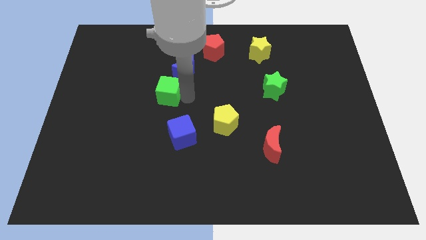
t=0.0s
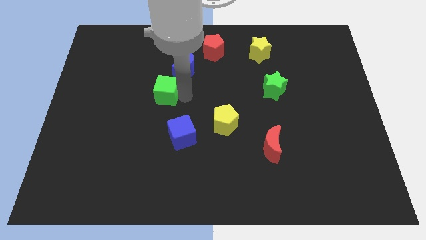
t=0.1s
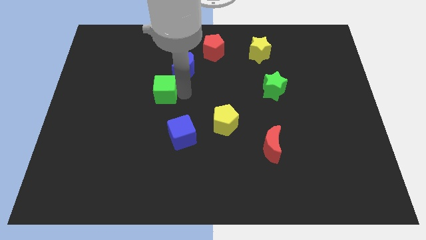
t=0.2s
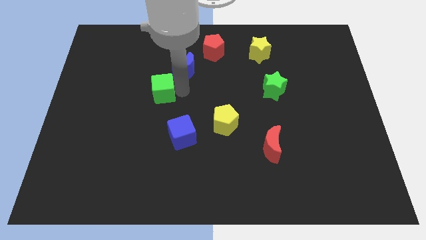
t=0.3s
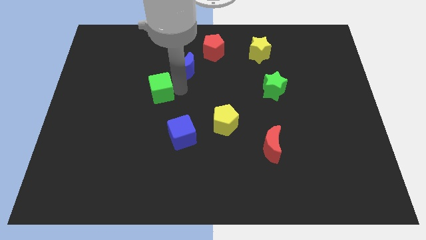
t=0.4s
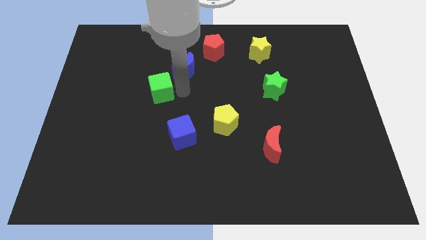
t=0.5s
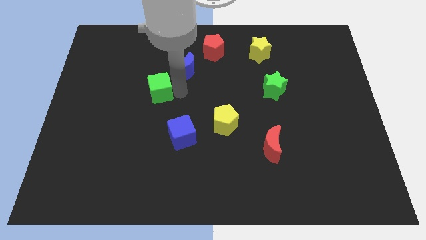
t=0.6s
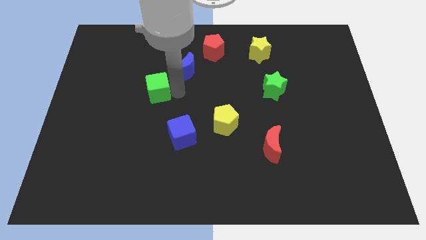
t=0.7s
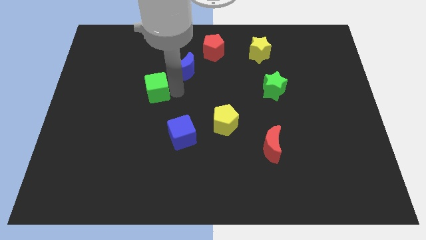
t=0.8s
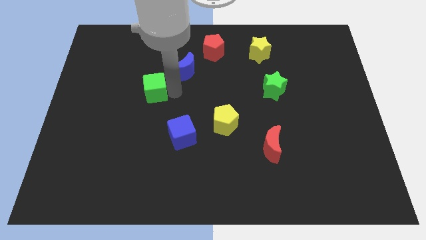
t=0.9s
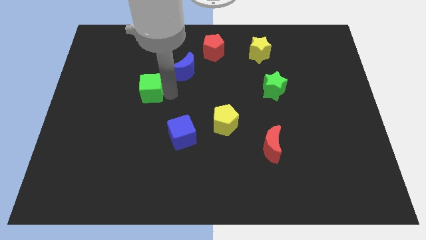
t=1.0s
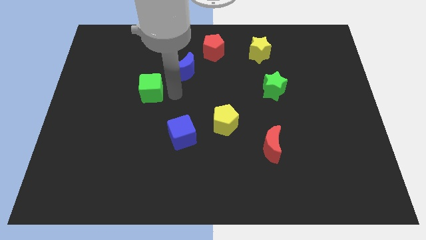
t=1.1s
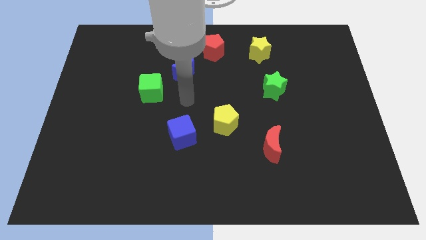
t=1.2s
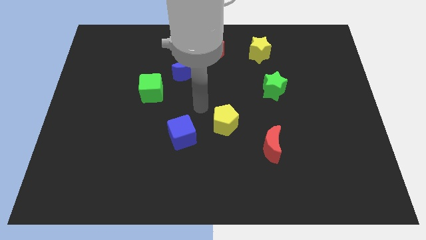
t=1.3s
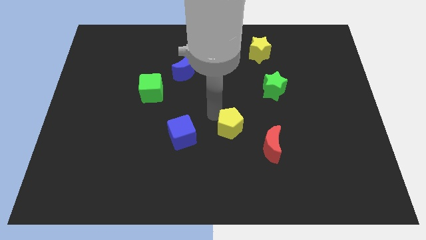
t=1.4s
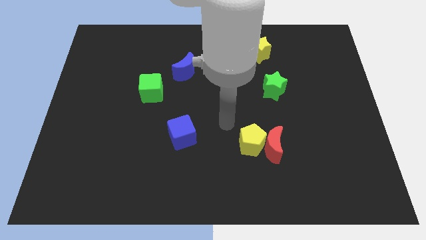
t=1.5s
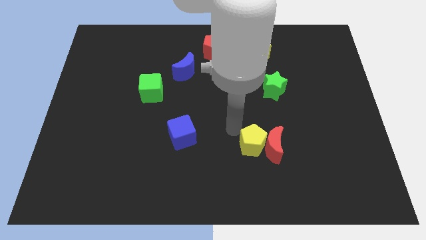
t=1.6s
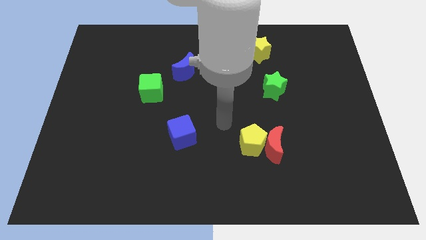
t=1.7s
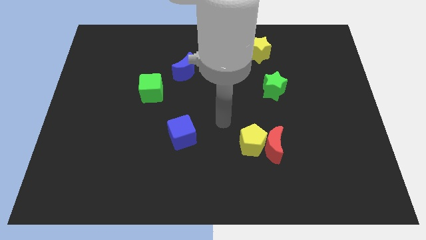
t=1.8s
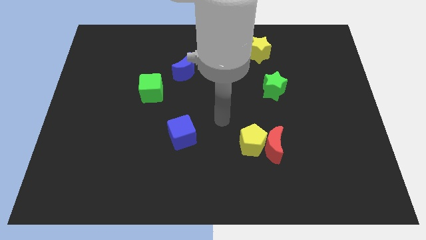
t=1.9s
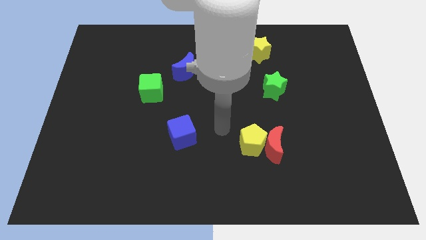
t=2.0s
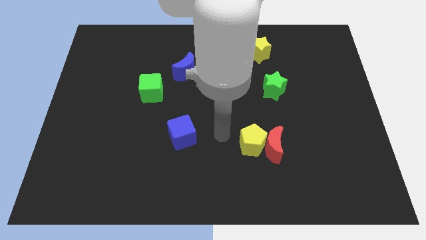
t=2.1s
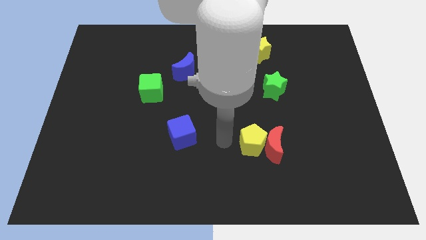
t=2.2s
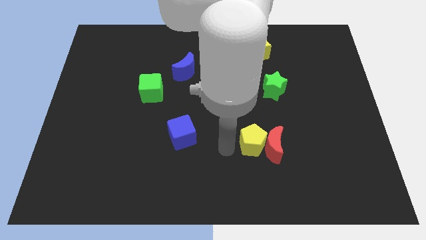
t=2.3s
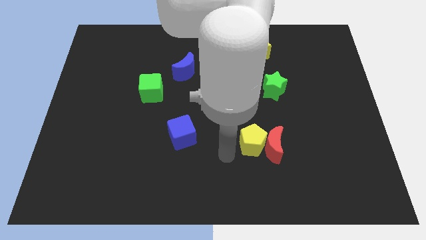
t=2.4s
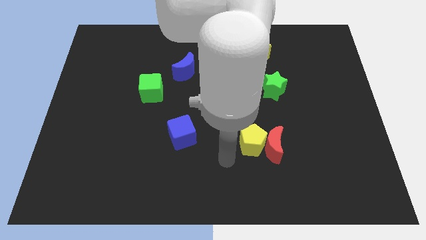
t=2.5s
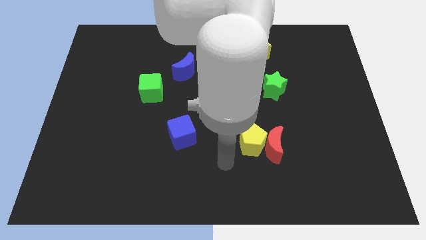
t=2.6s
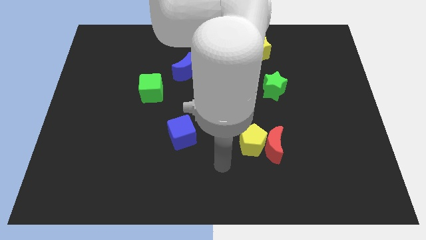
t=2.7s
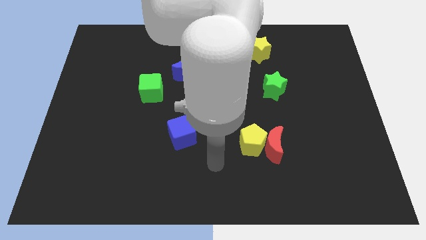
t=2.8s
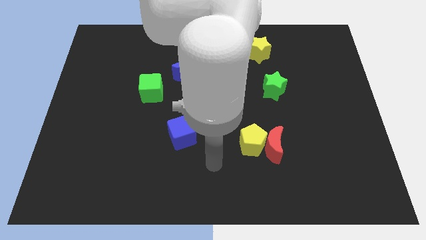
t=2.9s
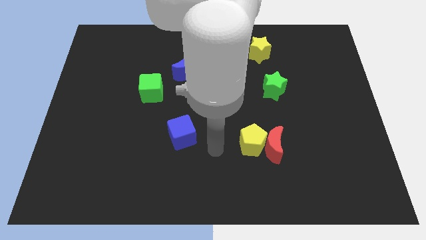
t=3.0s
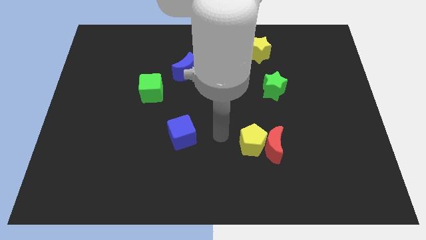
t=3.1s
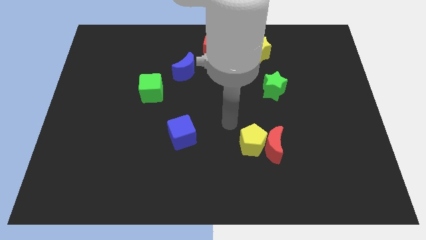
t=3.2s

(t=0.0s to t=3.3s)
move the yellow pentagon into the red moon

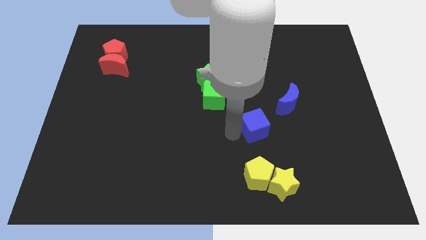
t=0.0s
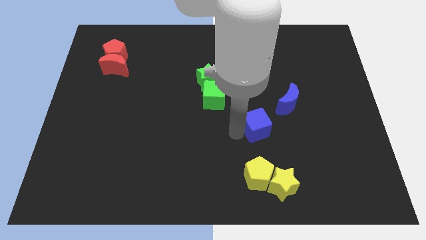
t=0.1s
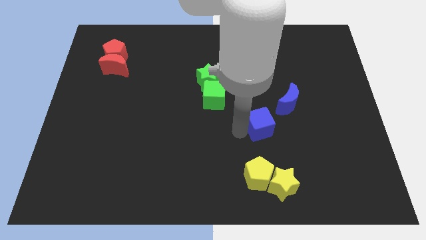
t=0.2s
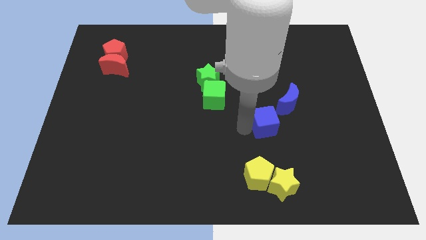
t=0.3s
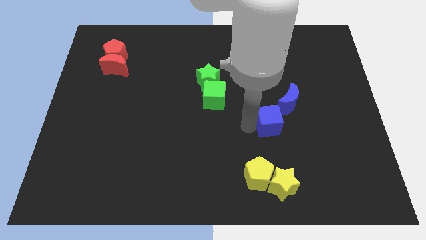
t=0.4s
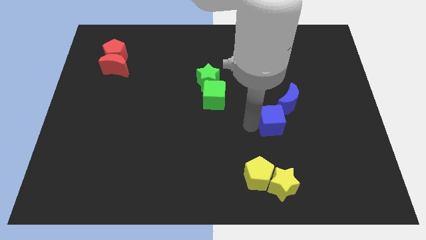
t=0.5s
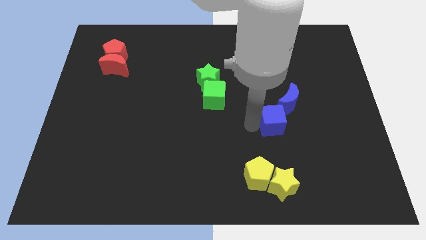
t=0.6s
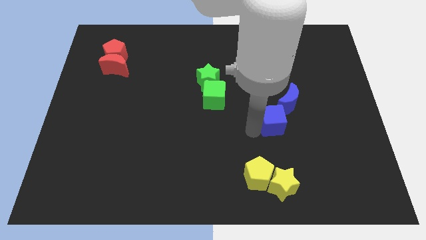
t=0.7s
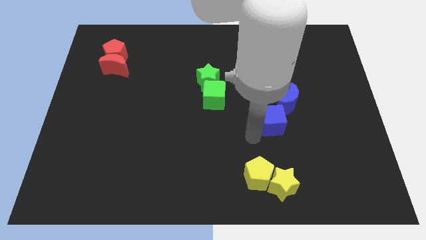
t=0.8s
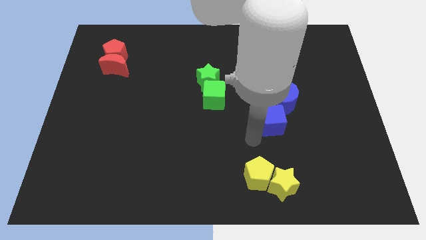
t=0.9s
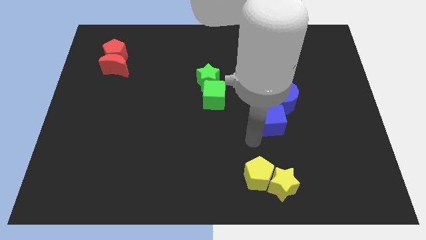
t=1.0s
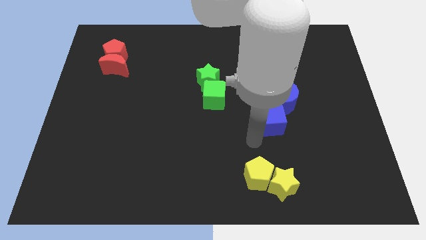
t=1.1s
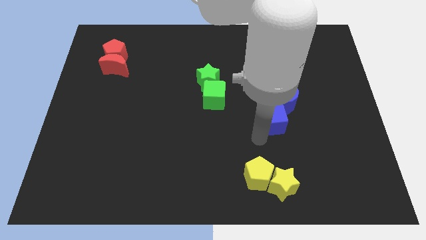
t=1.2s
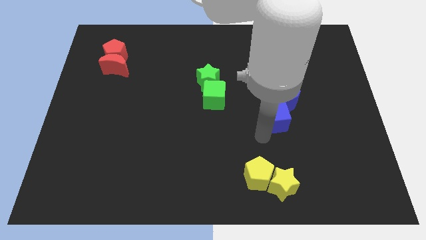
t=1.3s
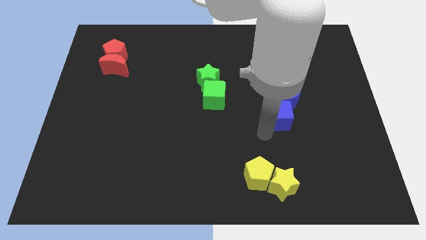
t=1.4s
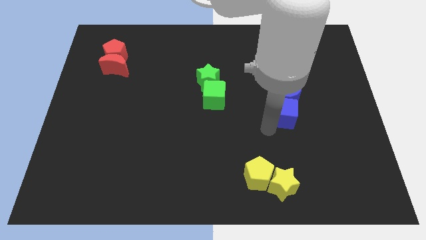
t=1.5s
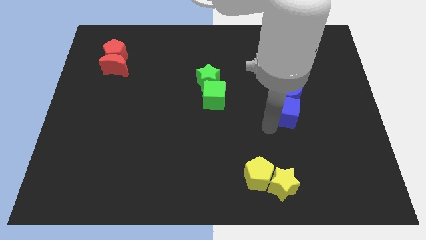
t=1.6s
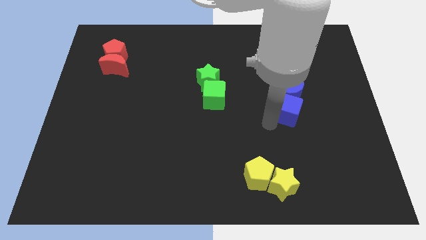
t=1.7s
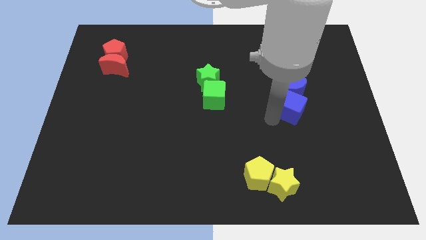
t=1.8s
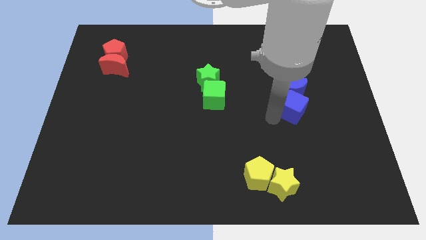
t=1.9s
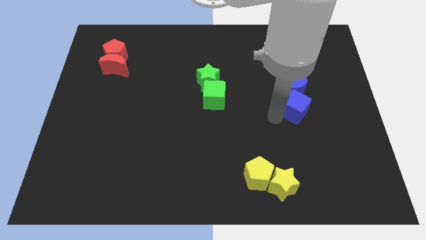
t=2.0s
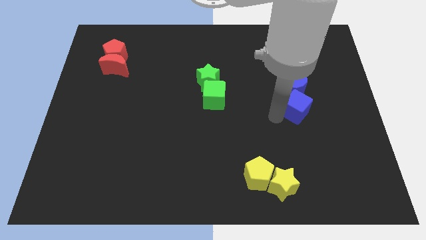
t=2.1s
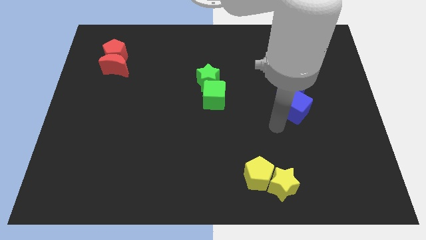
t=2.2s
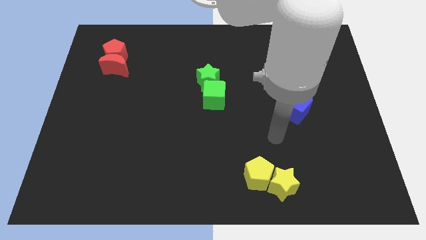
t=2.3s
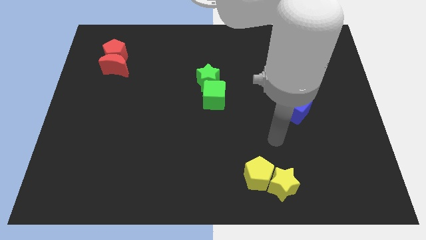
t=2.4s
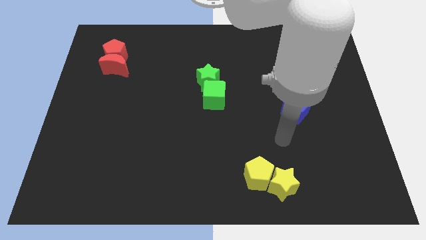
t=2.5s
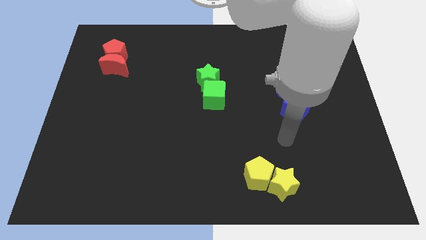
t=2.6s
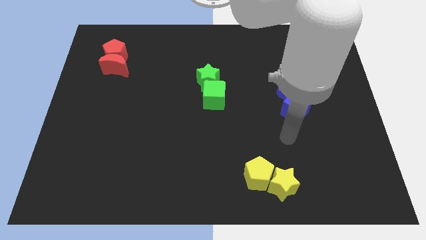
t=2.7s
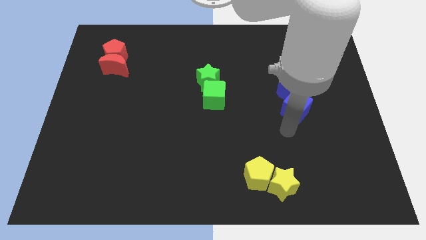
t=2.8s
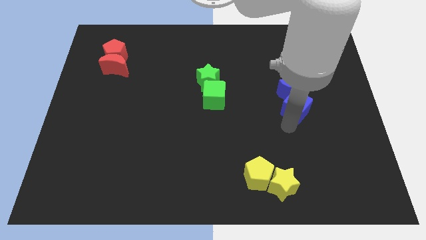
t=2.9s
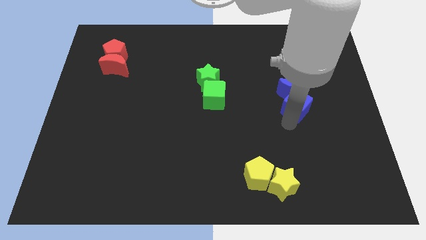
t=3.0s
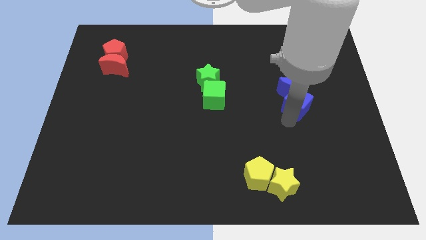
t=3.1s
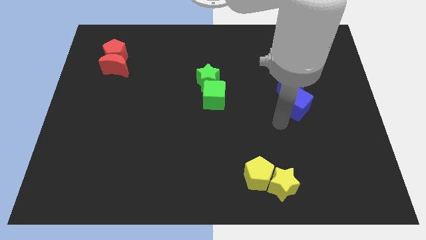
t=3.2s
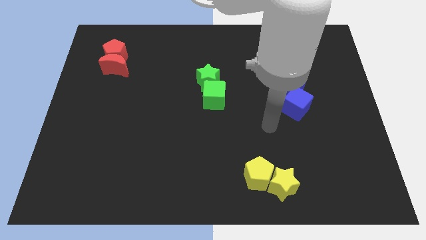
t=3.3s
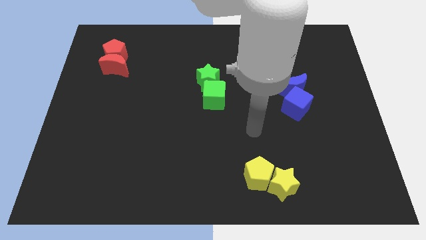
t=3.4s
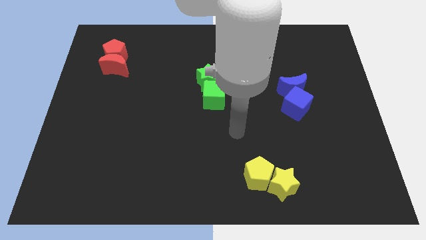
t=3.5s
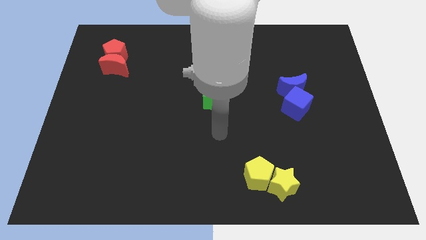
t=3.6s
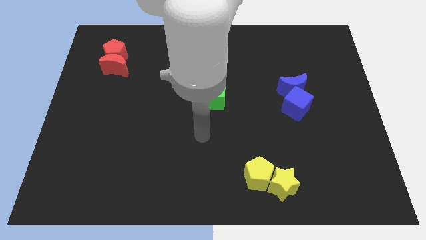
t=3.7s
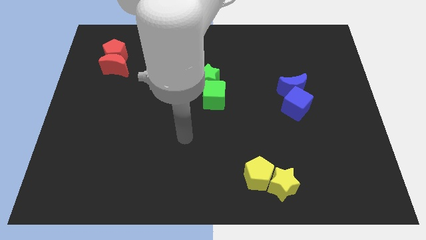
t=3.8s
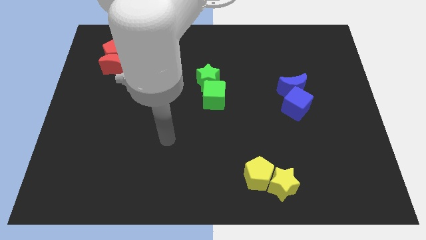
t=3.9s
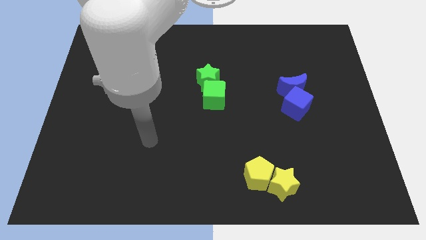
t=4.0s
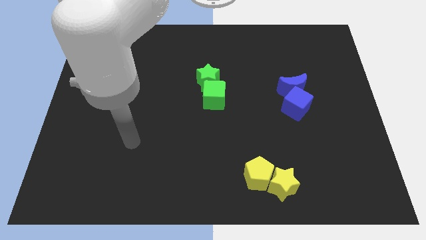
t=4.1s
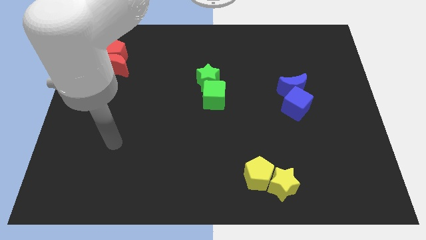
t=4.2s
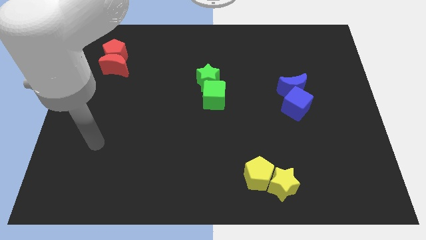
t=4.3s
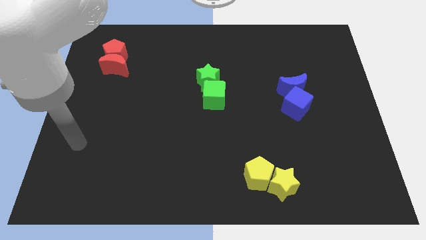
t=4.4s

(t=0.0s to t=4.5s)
push blue cube into the blue moon

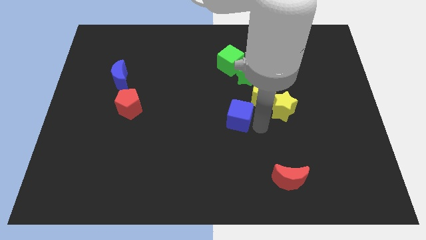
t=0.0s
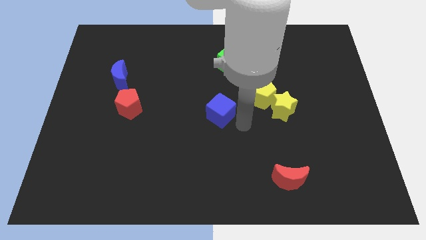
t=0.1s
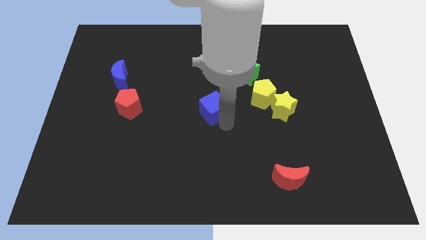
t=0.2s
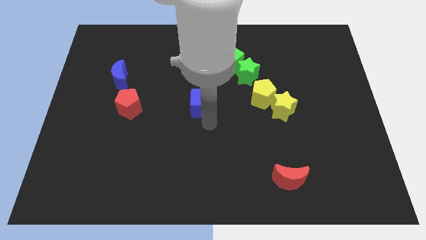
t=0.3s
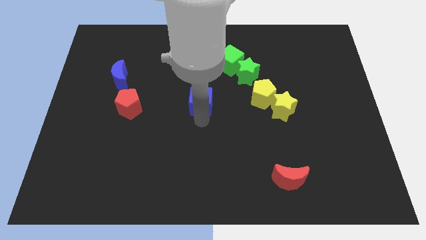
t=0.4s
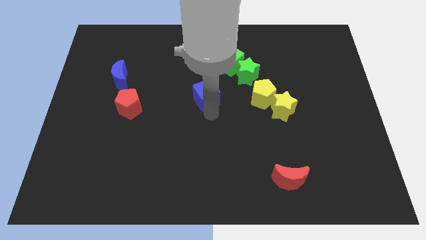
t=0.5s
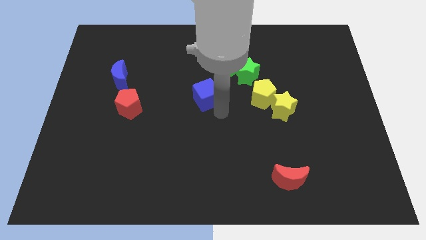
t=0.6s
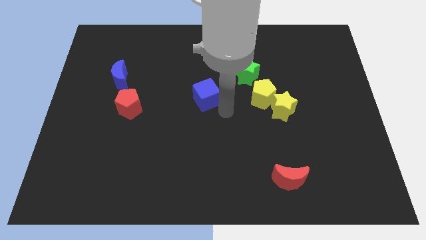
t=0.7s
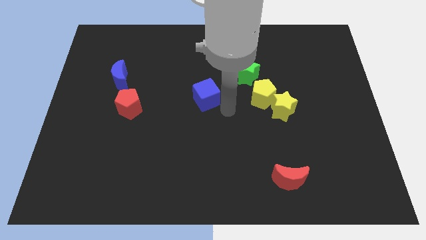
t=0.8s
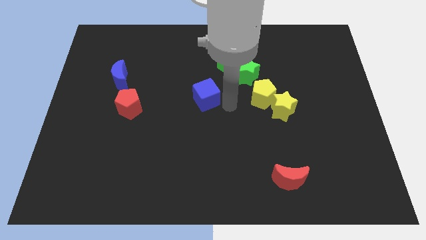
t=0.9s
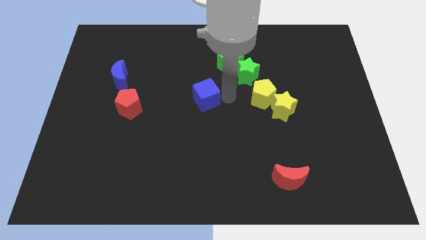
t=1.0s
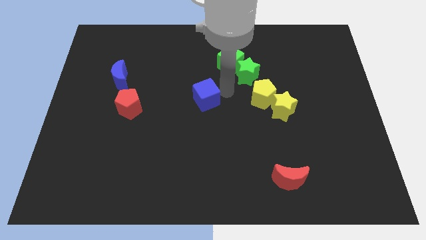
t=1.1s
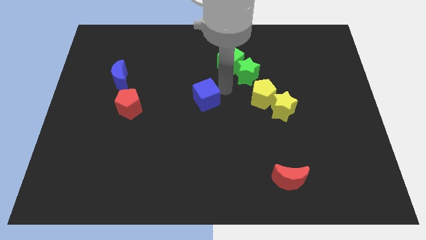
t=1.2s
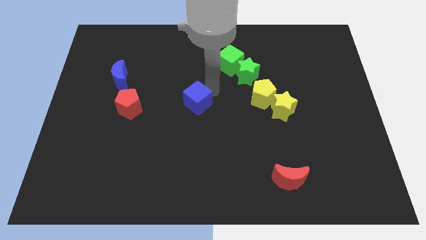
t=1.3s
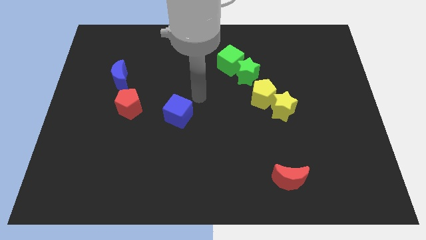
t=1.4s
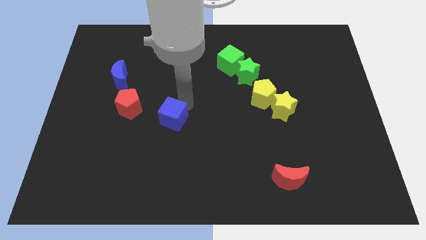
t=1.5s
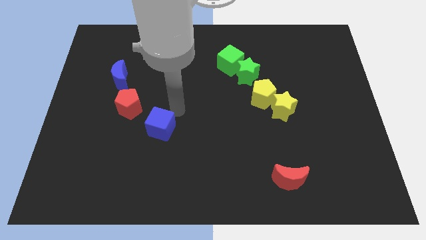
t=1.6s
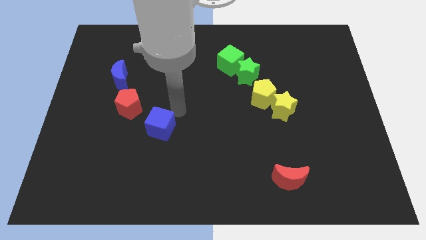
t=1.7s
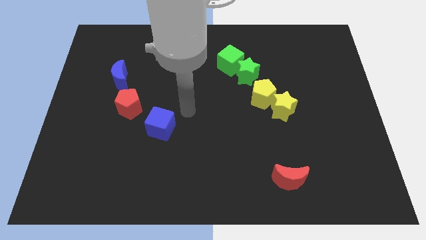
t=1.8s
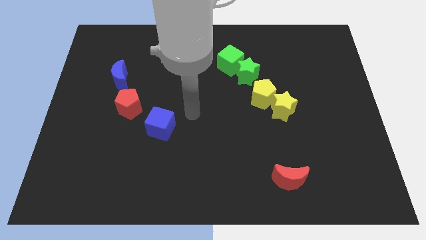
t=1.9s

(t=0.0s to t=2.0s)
place the blue cube to the bottom right side of the red pentagon
